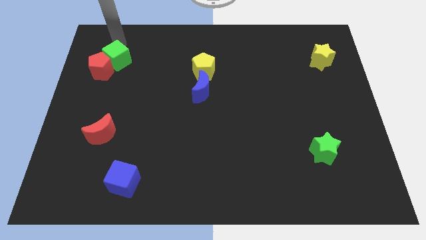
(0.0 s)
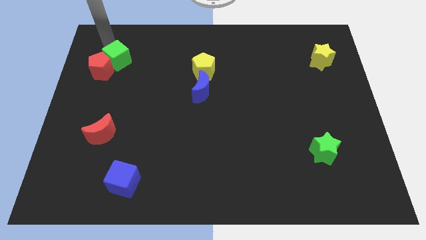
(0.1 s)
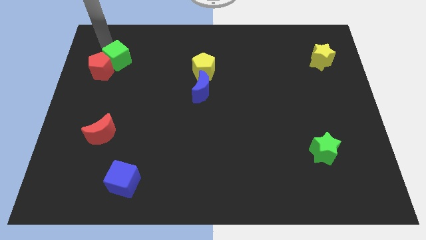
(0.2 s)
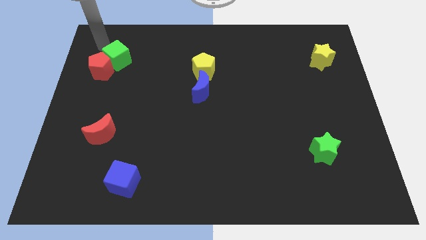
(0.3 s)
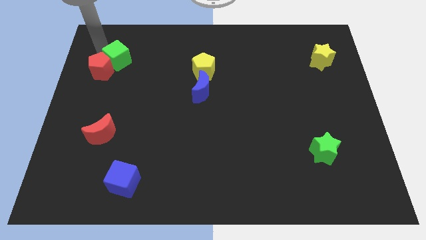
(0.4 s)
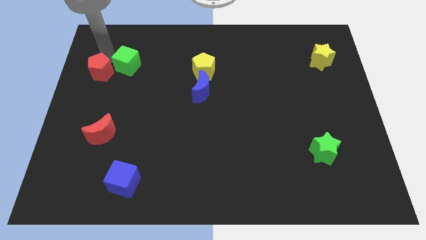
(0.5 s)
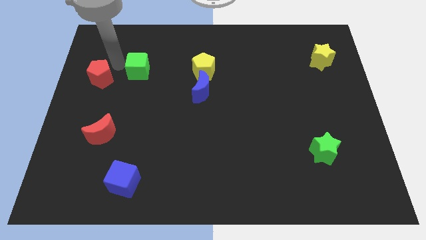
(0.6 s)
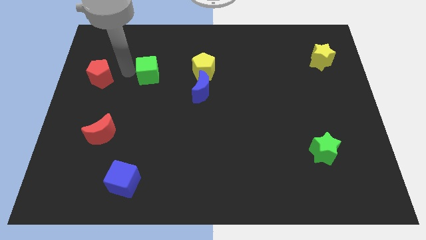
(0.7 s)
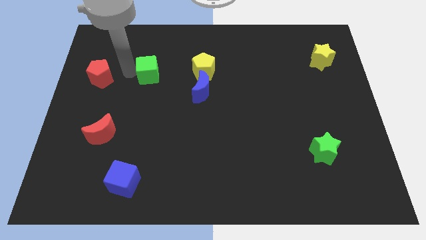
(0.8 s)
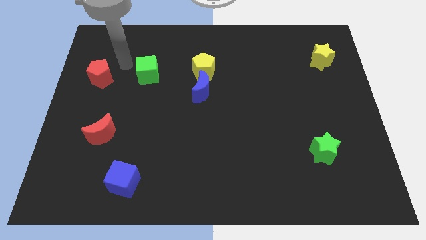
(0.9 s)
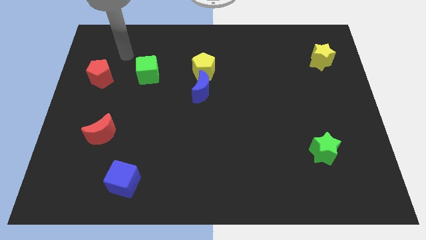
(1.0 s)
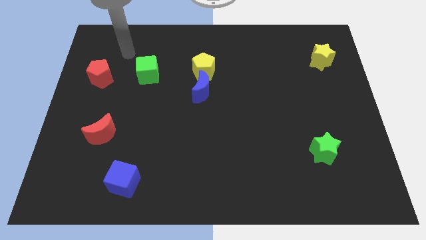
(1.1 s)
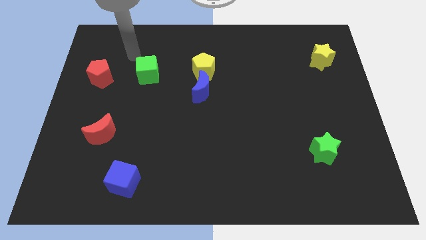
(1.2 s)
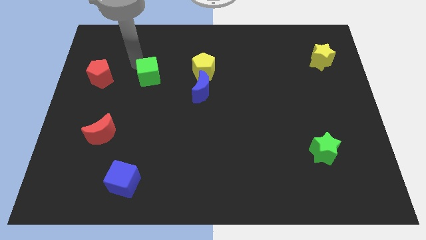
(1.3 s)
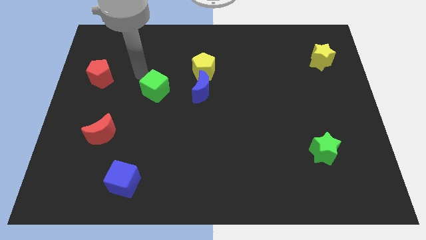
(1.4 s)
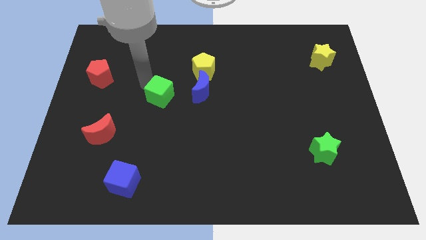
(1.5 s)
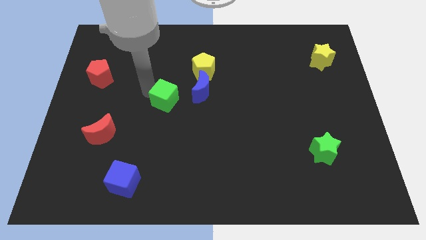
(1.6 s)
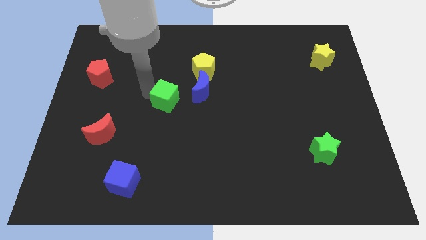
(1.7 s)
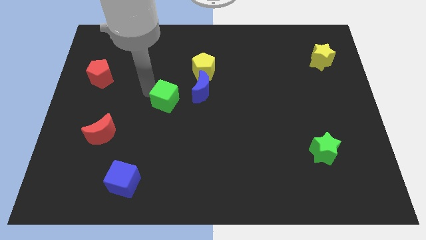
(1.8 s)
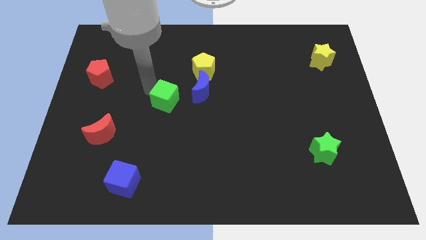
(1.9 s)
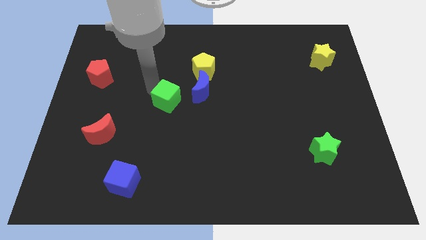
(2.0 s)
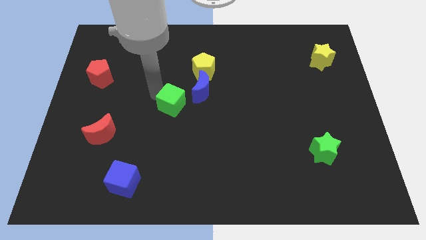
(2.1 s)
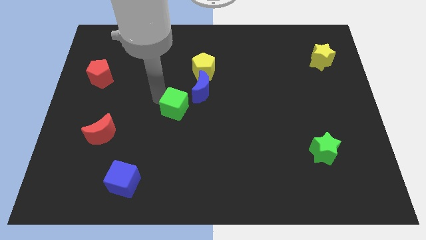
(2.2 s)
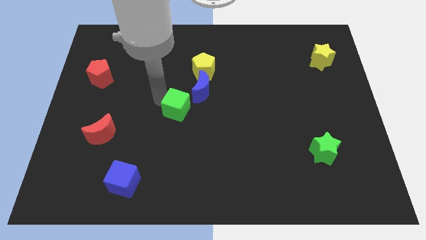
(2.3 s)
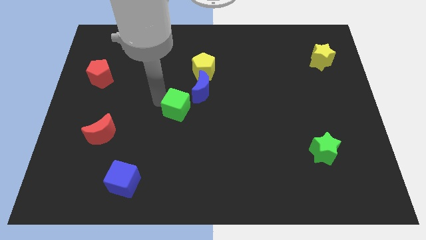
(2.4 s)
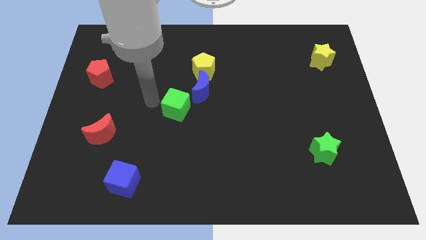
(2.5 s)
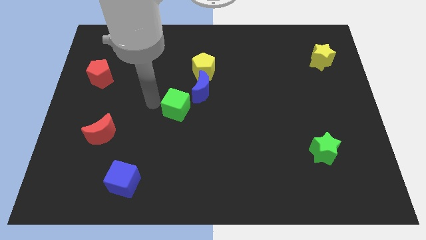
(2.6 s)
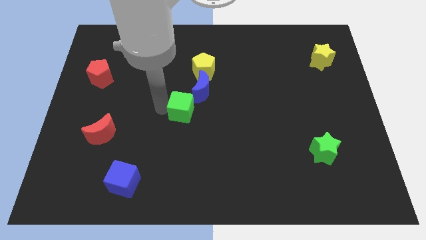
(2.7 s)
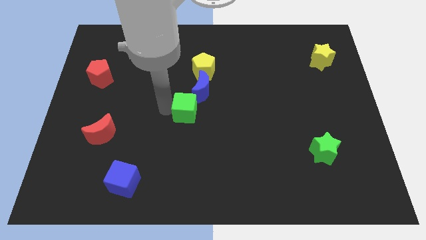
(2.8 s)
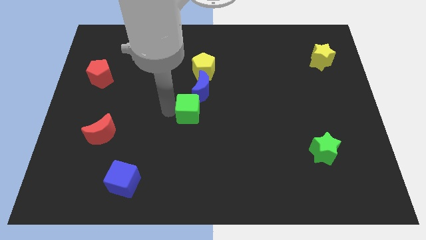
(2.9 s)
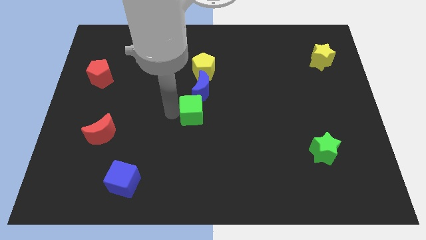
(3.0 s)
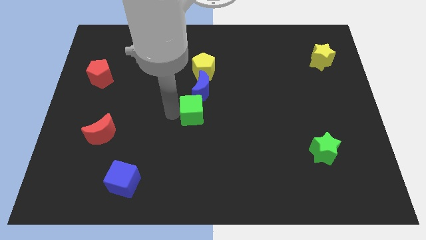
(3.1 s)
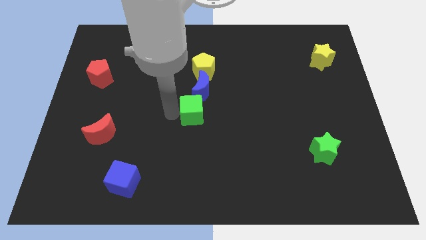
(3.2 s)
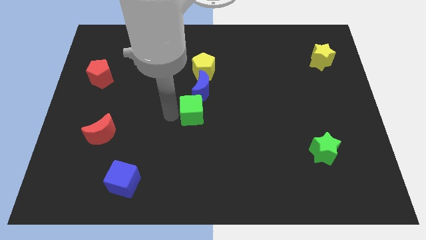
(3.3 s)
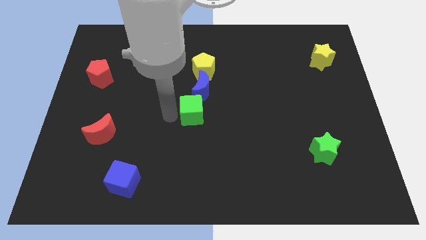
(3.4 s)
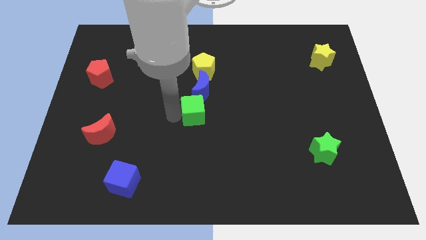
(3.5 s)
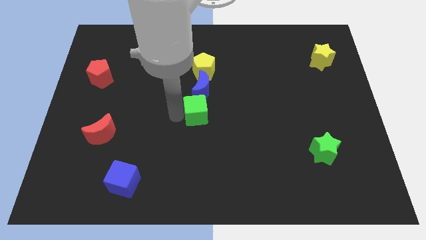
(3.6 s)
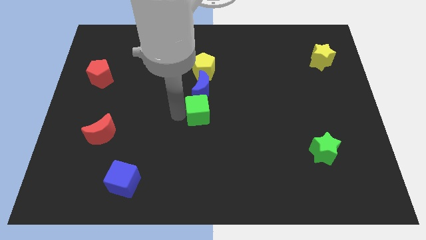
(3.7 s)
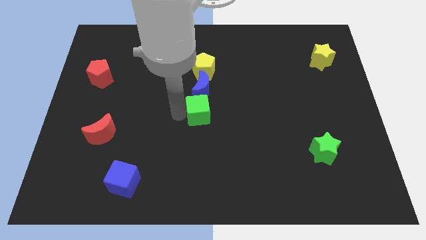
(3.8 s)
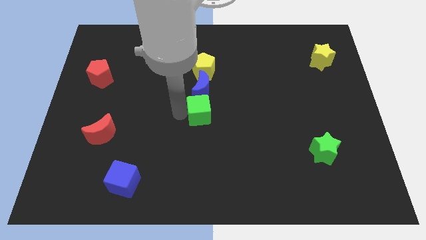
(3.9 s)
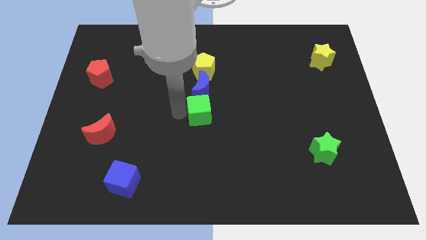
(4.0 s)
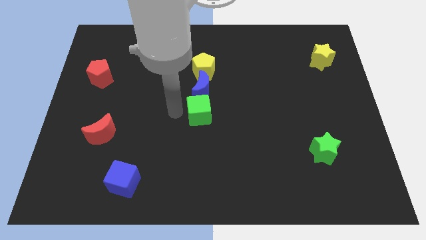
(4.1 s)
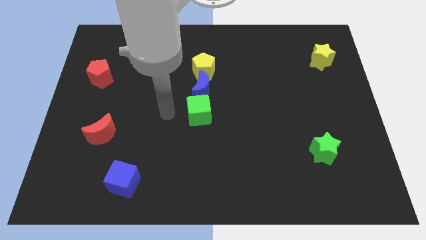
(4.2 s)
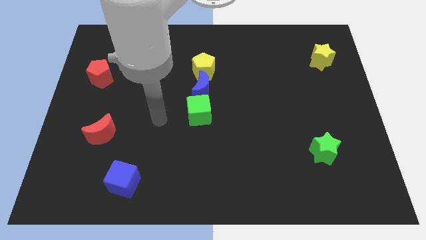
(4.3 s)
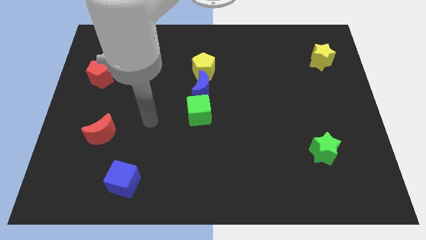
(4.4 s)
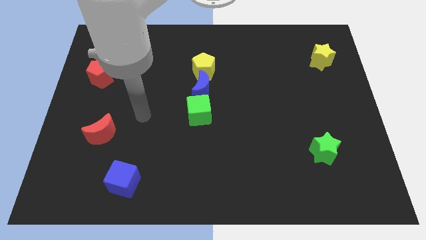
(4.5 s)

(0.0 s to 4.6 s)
move the green cube below the blue crescent

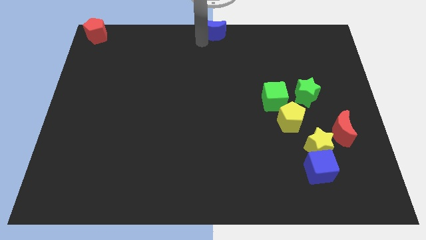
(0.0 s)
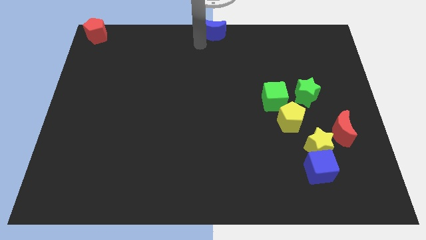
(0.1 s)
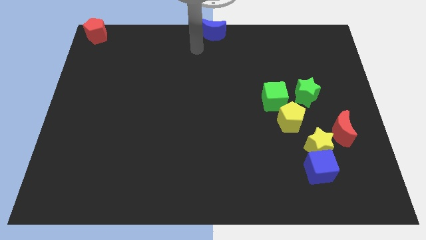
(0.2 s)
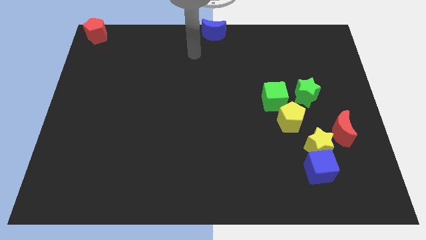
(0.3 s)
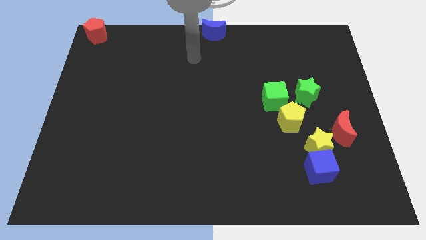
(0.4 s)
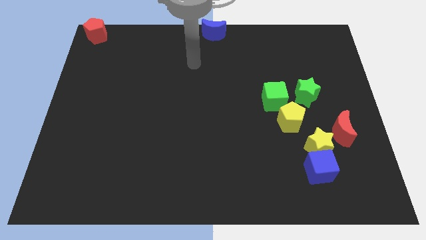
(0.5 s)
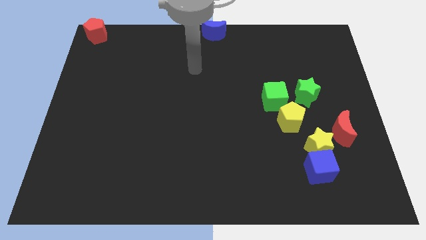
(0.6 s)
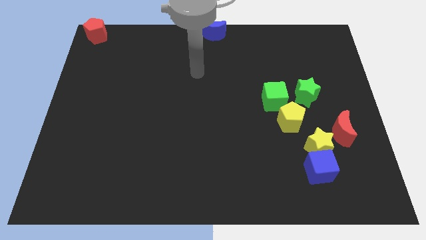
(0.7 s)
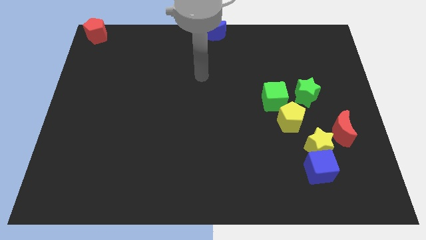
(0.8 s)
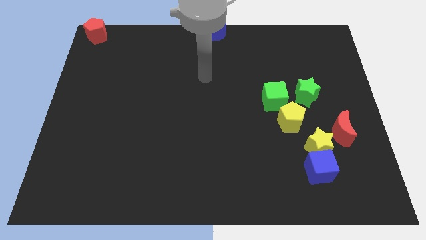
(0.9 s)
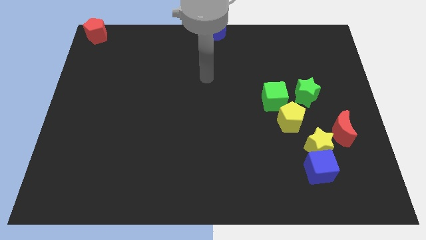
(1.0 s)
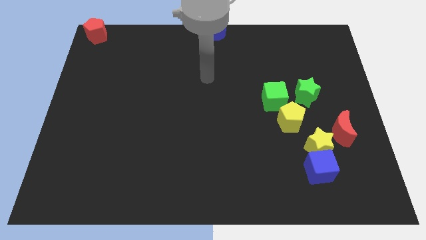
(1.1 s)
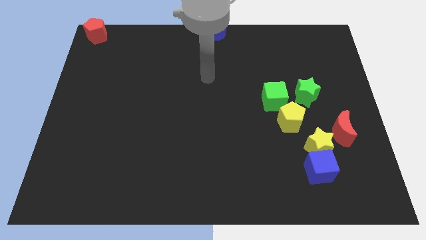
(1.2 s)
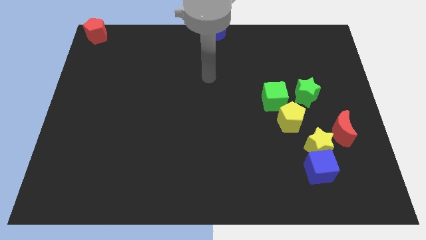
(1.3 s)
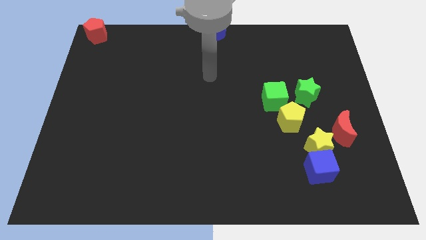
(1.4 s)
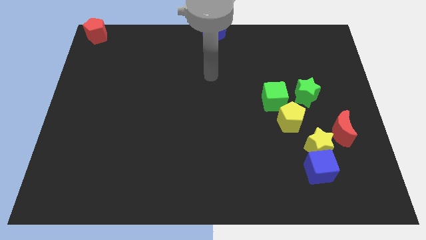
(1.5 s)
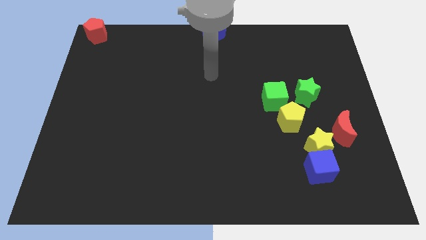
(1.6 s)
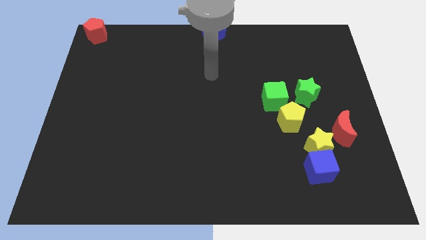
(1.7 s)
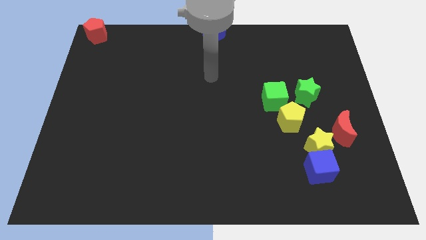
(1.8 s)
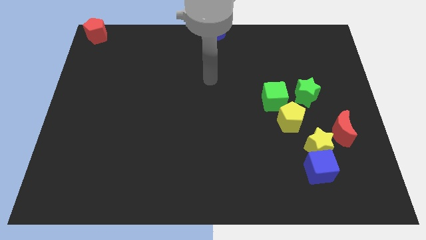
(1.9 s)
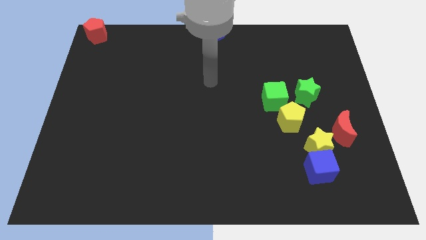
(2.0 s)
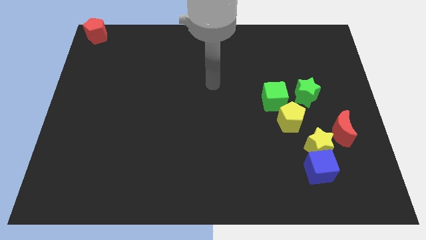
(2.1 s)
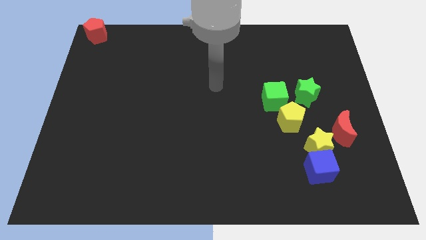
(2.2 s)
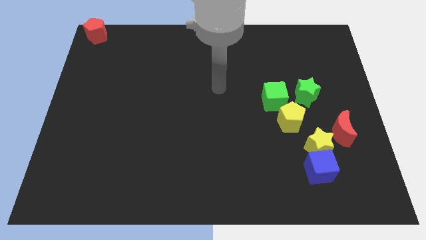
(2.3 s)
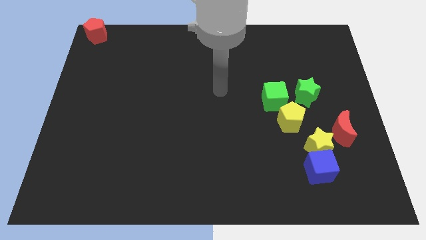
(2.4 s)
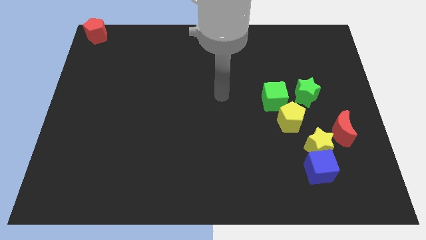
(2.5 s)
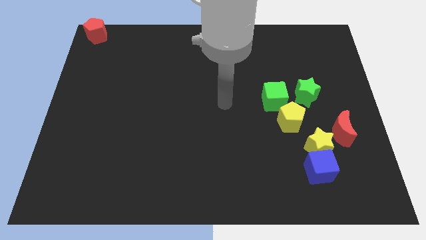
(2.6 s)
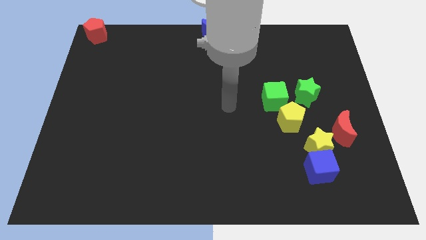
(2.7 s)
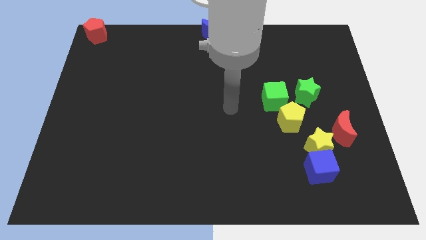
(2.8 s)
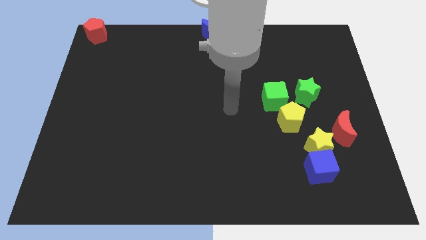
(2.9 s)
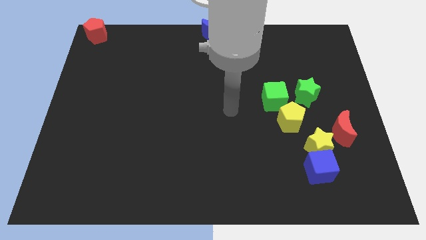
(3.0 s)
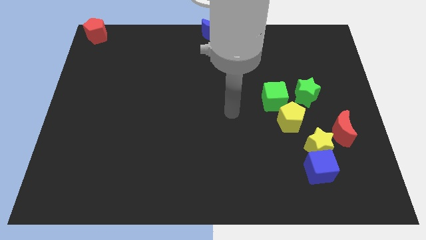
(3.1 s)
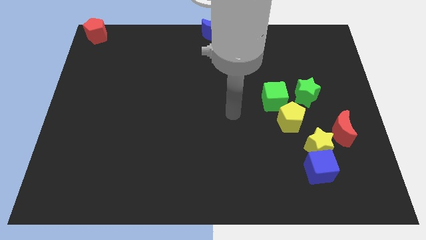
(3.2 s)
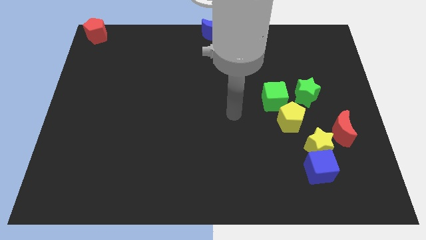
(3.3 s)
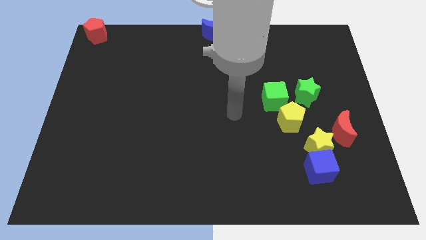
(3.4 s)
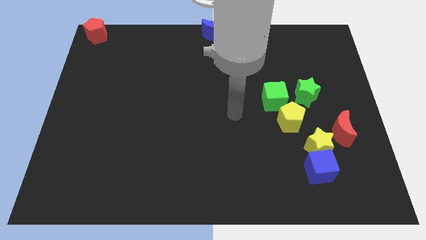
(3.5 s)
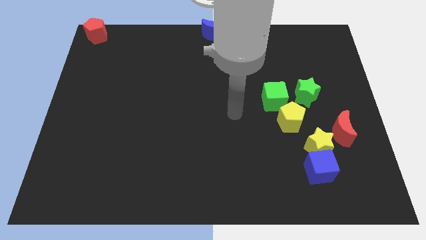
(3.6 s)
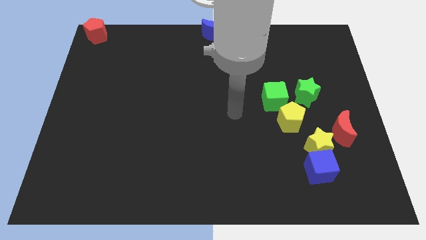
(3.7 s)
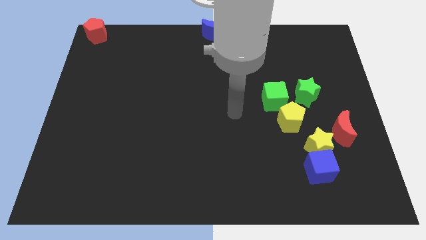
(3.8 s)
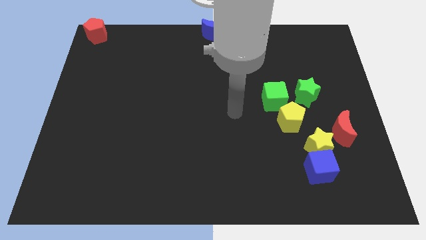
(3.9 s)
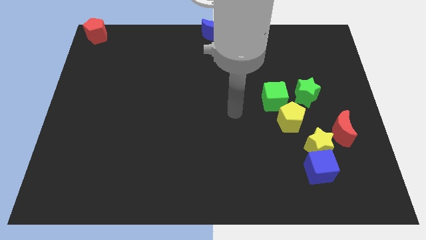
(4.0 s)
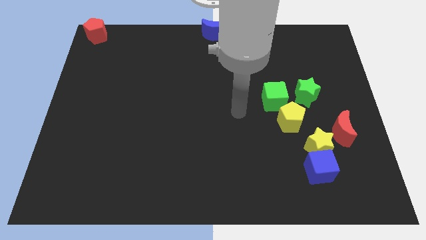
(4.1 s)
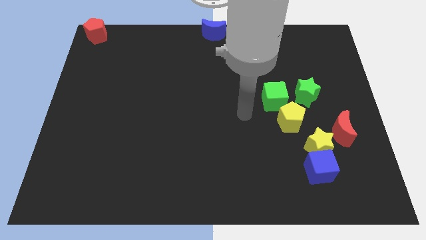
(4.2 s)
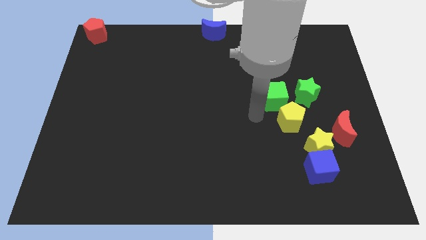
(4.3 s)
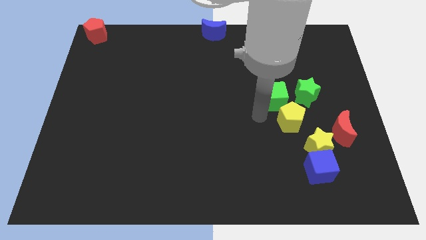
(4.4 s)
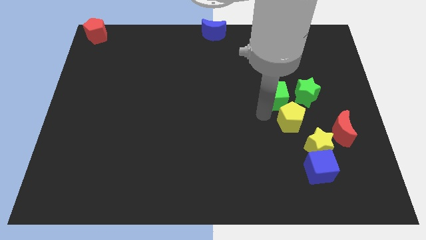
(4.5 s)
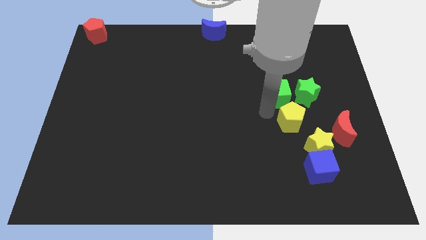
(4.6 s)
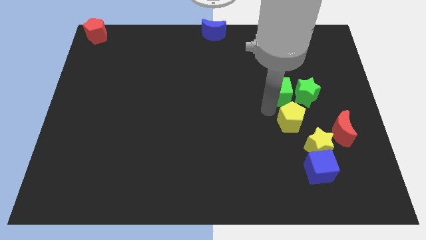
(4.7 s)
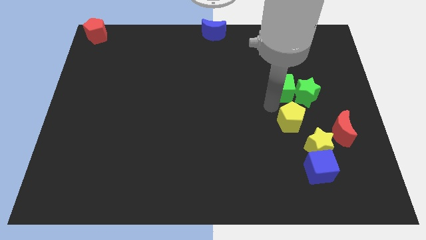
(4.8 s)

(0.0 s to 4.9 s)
move your arm towards the green cube
